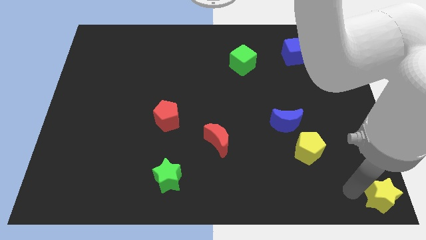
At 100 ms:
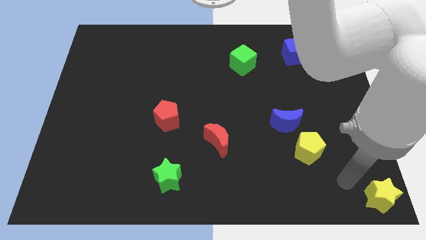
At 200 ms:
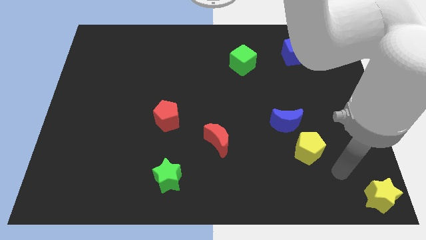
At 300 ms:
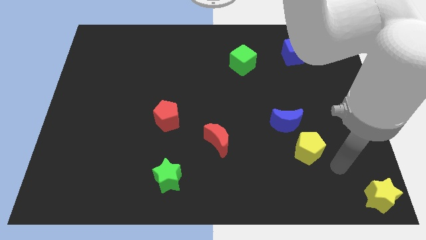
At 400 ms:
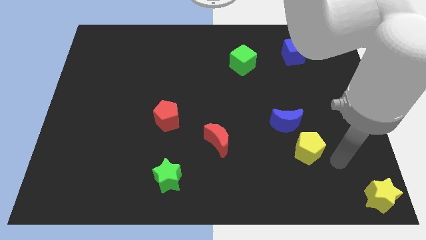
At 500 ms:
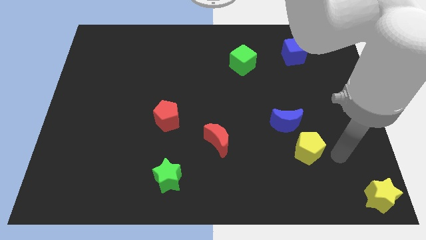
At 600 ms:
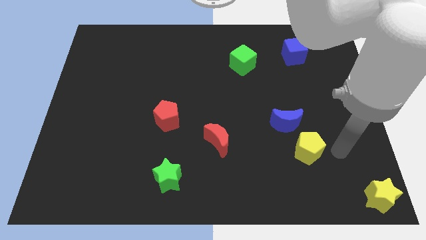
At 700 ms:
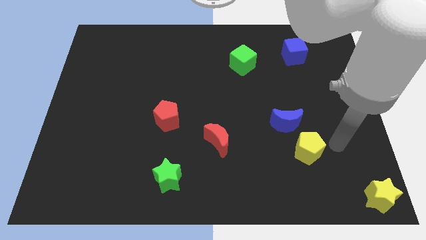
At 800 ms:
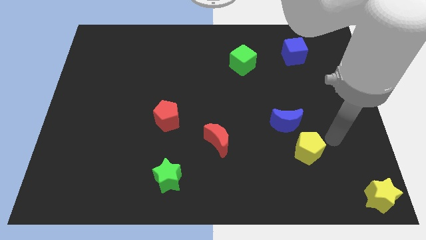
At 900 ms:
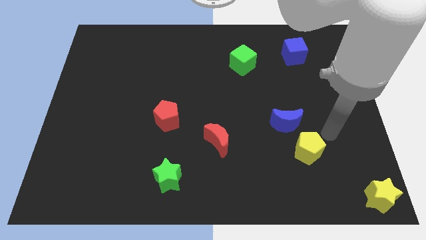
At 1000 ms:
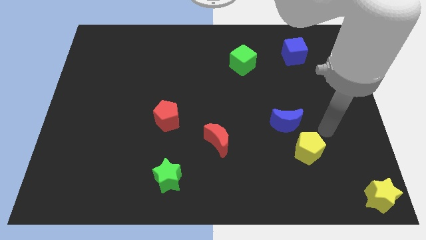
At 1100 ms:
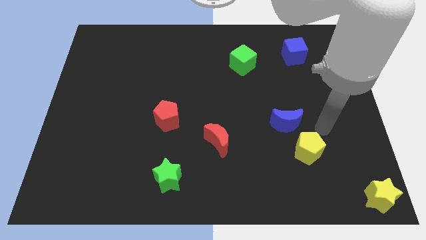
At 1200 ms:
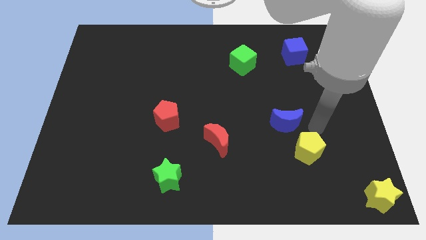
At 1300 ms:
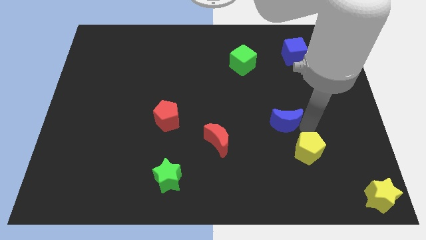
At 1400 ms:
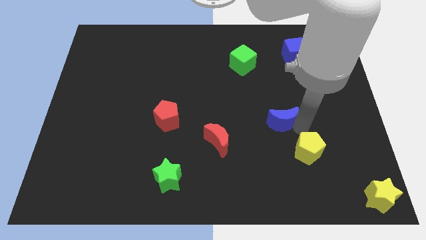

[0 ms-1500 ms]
place your arm to the top of the yellow pentagon

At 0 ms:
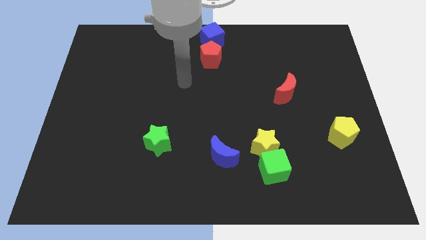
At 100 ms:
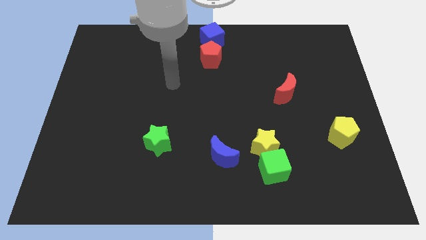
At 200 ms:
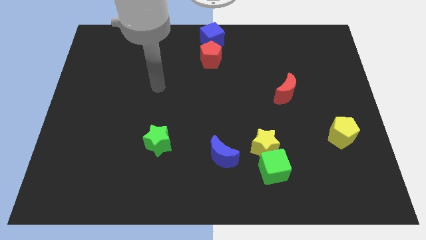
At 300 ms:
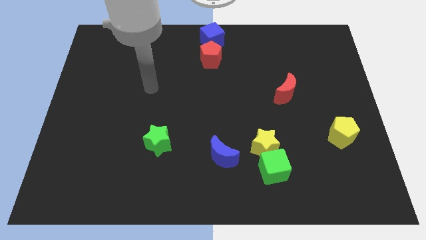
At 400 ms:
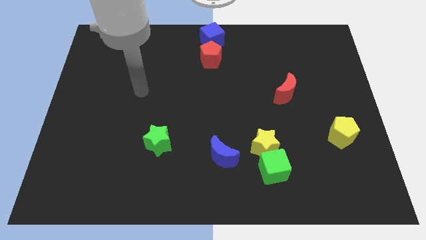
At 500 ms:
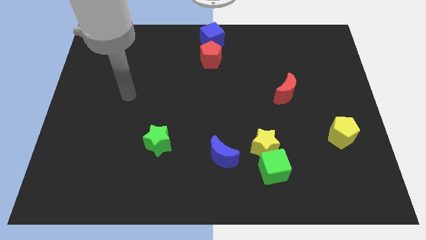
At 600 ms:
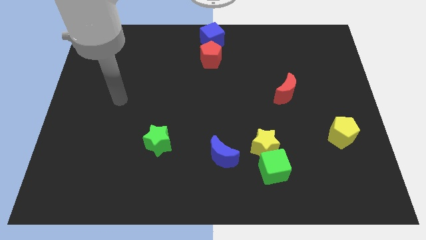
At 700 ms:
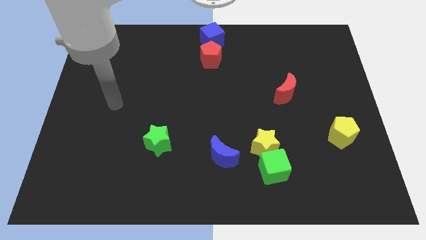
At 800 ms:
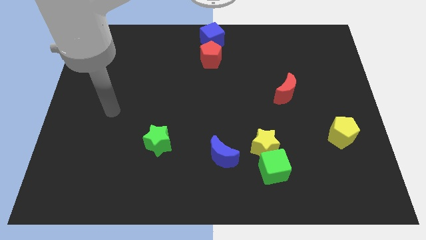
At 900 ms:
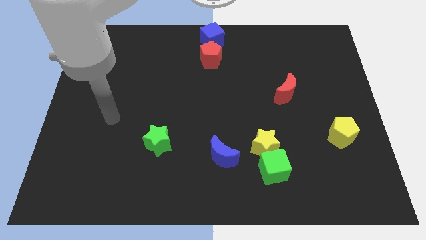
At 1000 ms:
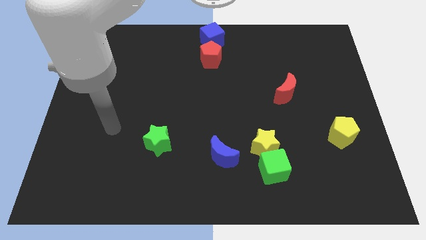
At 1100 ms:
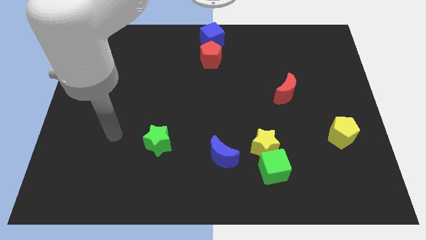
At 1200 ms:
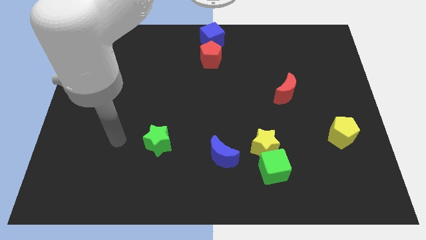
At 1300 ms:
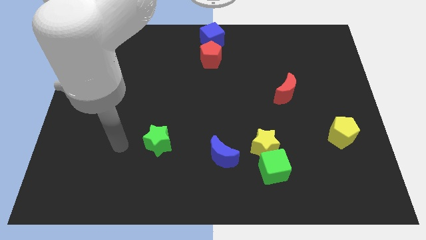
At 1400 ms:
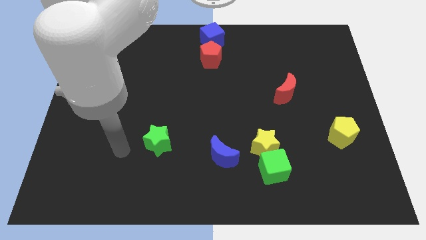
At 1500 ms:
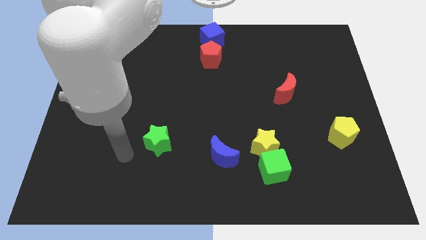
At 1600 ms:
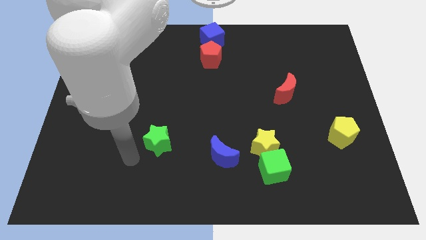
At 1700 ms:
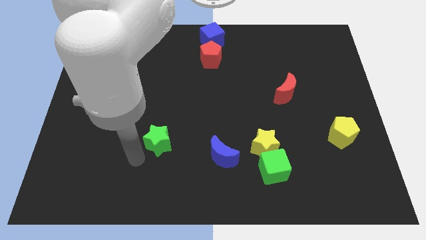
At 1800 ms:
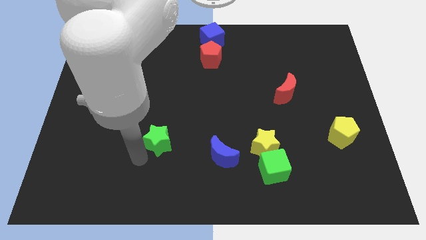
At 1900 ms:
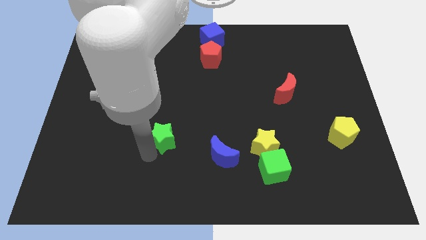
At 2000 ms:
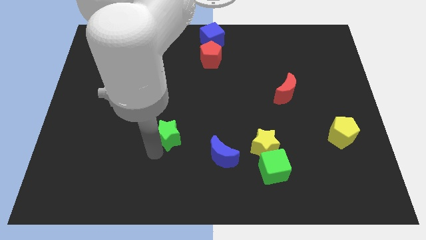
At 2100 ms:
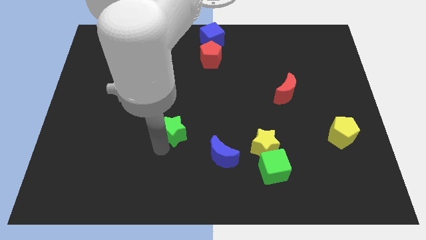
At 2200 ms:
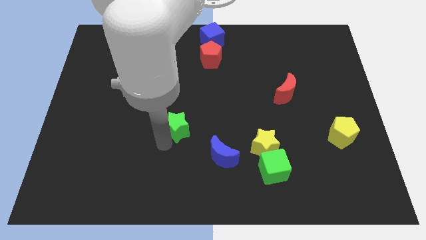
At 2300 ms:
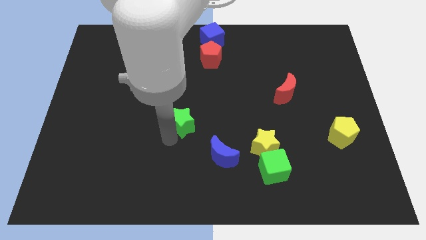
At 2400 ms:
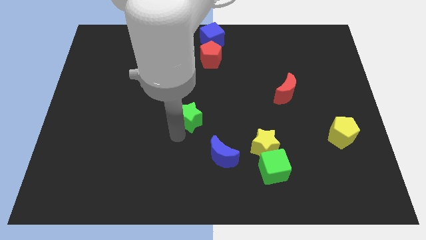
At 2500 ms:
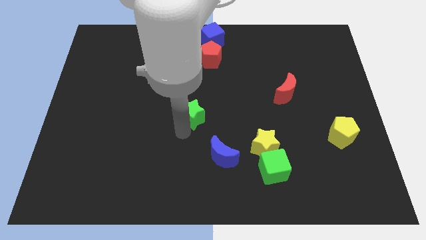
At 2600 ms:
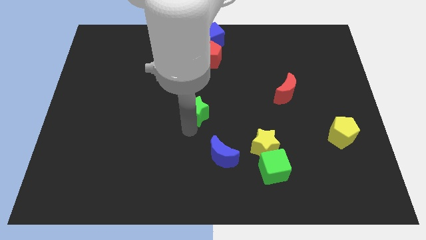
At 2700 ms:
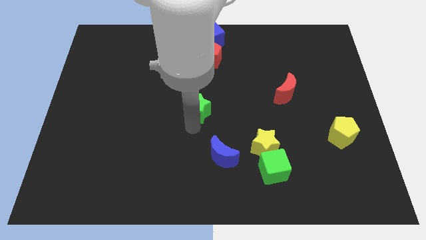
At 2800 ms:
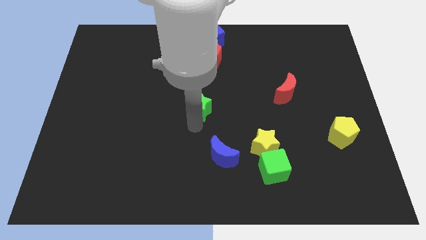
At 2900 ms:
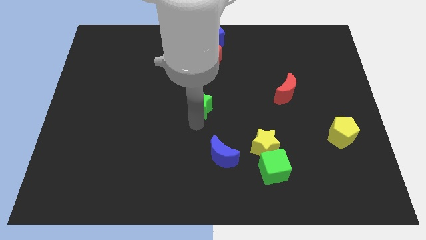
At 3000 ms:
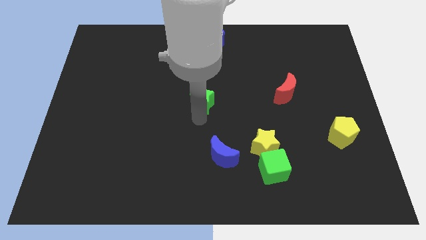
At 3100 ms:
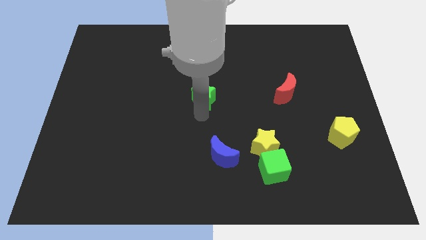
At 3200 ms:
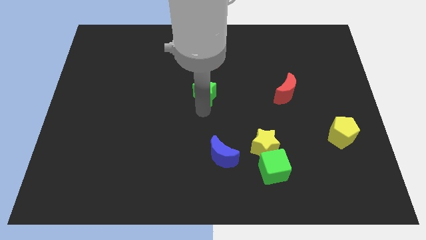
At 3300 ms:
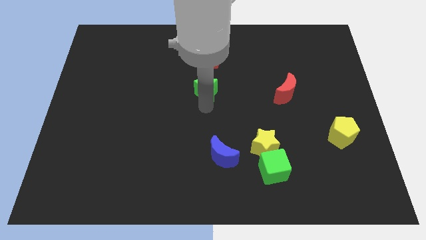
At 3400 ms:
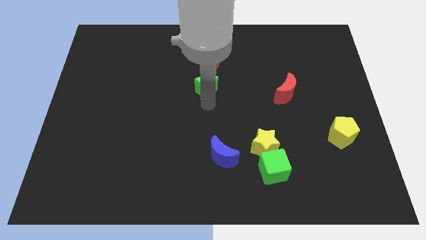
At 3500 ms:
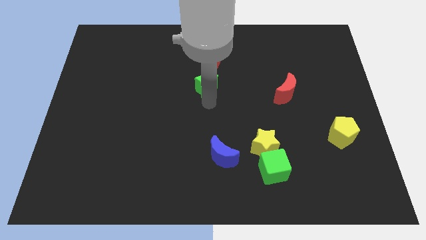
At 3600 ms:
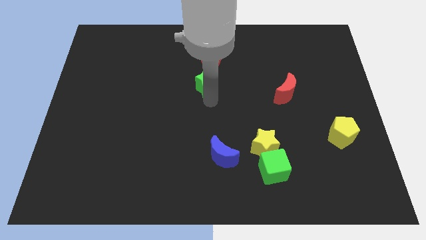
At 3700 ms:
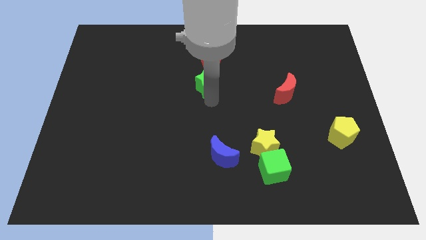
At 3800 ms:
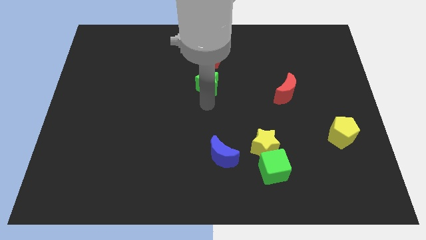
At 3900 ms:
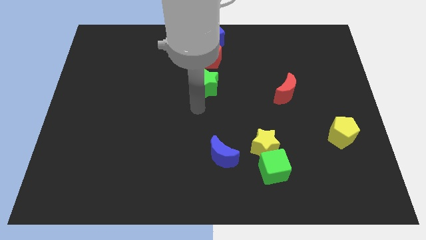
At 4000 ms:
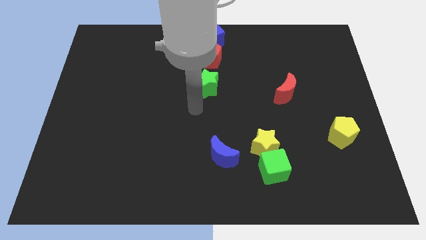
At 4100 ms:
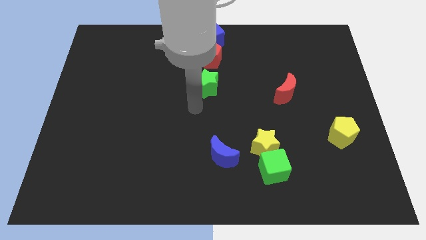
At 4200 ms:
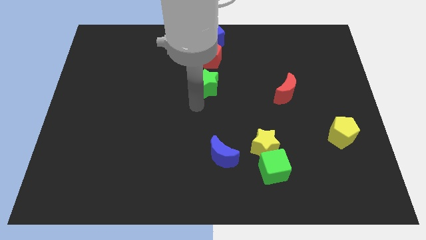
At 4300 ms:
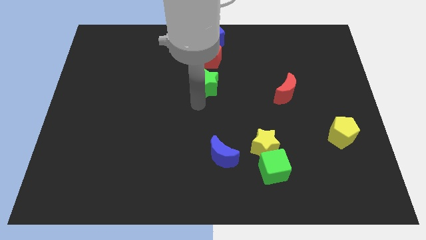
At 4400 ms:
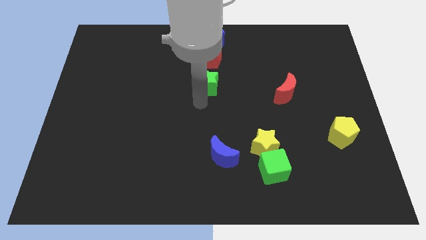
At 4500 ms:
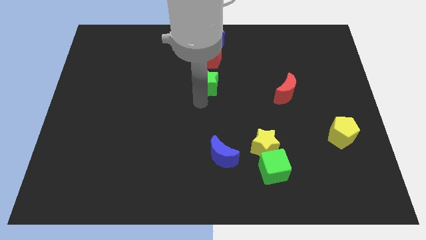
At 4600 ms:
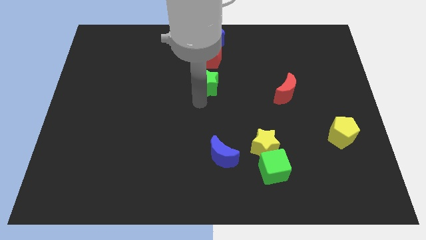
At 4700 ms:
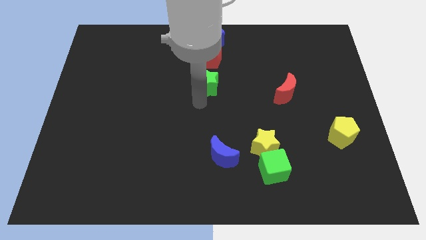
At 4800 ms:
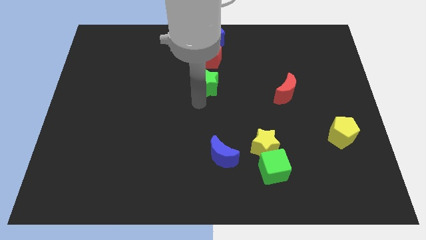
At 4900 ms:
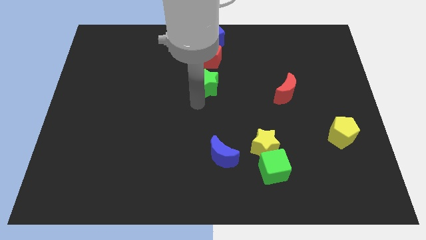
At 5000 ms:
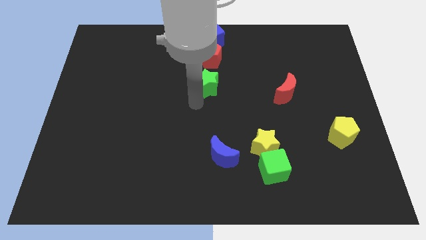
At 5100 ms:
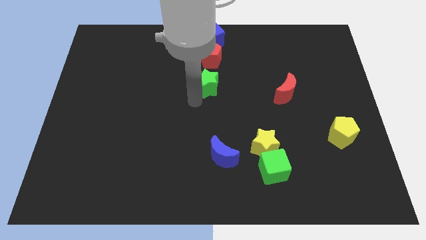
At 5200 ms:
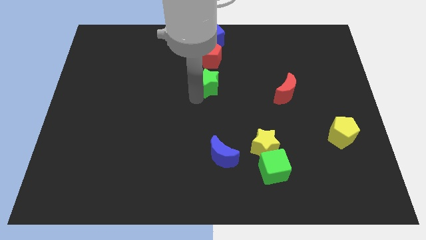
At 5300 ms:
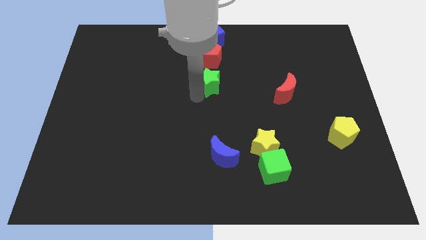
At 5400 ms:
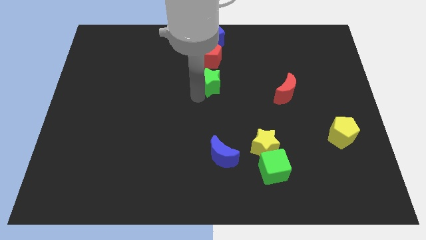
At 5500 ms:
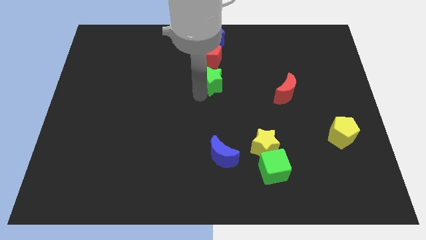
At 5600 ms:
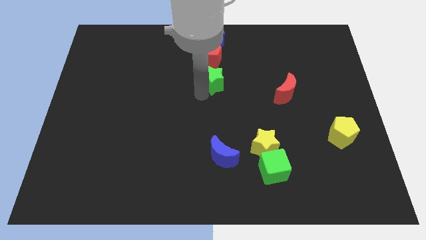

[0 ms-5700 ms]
place the green star to the bottom of the red pentagon

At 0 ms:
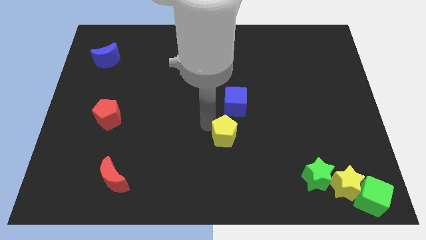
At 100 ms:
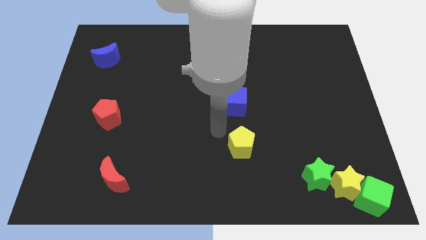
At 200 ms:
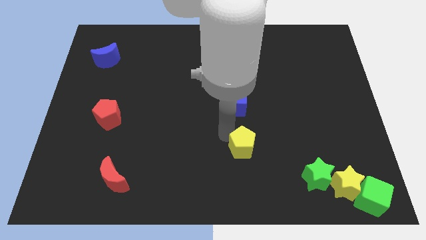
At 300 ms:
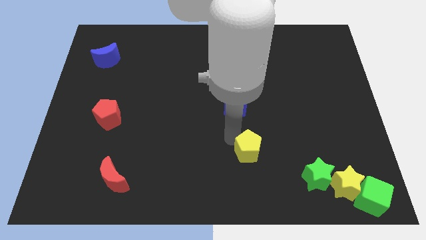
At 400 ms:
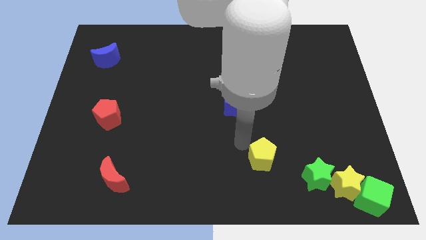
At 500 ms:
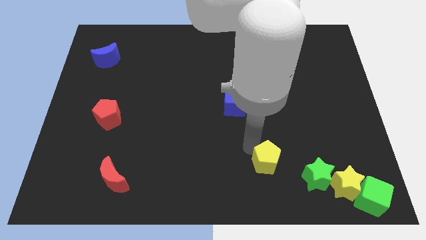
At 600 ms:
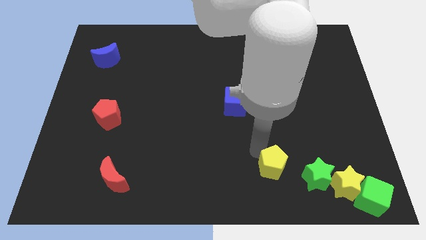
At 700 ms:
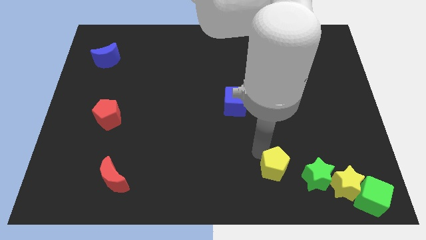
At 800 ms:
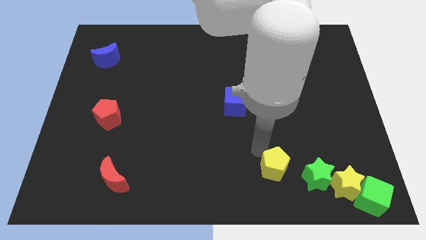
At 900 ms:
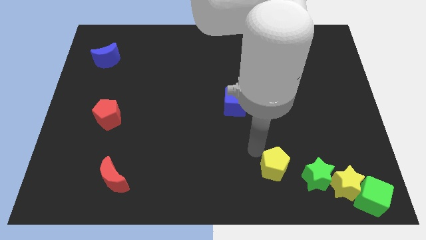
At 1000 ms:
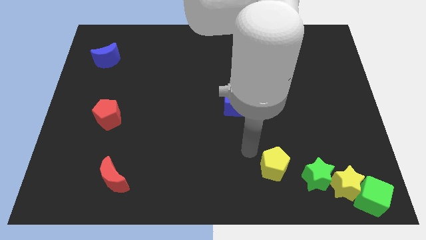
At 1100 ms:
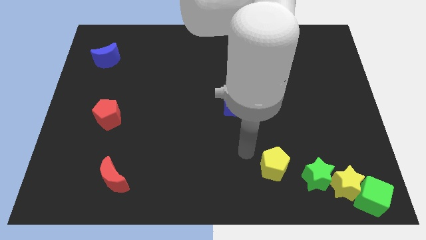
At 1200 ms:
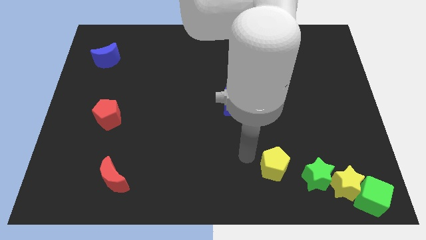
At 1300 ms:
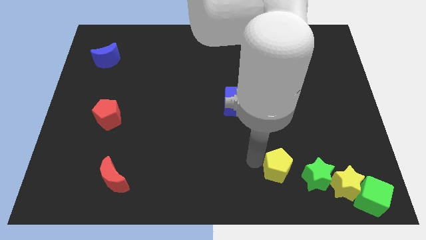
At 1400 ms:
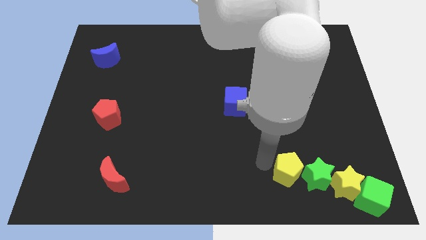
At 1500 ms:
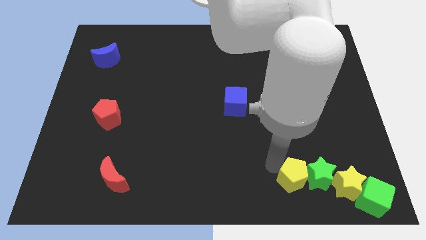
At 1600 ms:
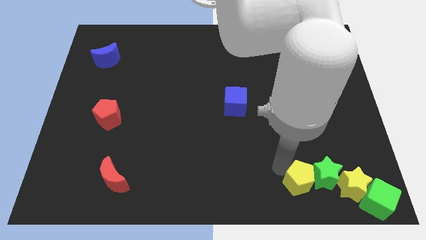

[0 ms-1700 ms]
move the yellow pentagon into green star

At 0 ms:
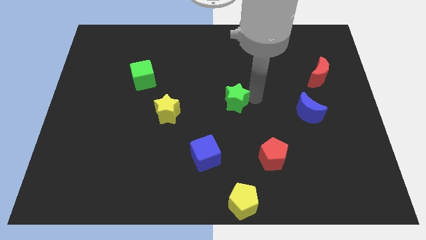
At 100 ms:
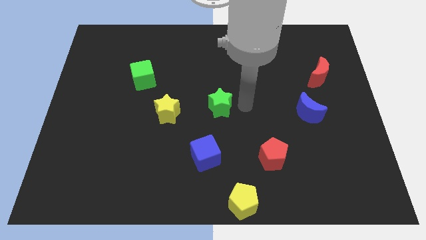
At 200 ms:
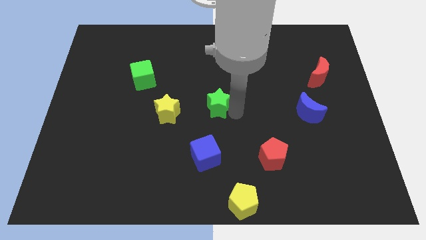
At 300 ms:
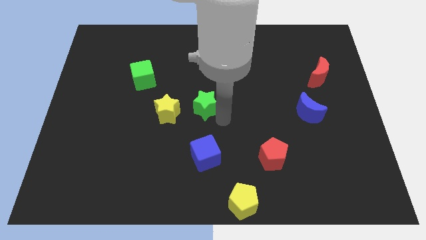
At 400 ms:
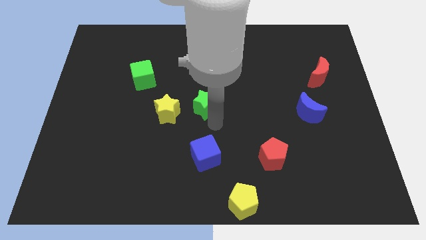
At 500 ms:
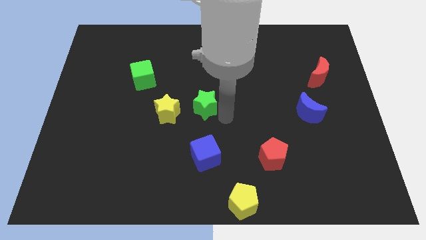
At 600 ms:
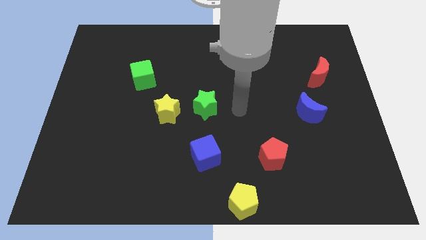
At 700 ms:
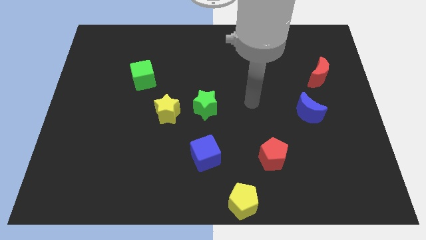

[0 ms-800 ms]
place the green star right to the yellow star
